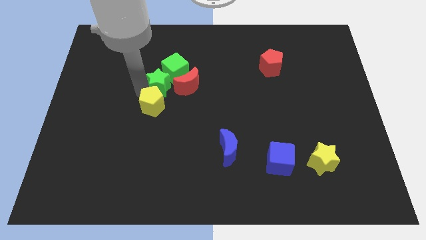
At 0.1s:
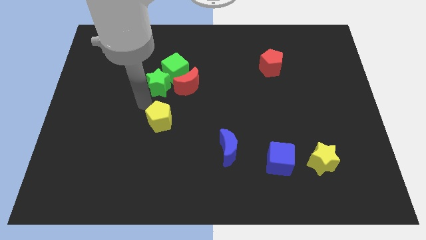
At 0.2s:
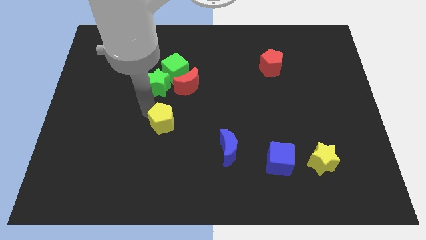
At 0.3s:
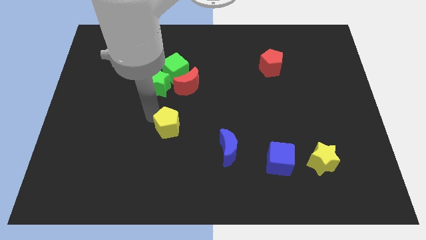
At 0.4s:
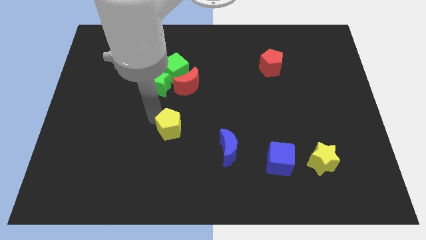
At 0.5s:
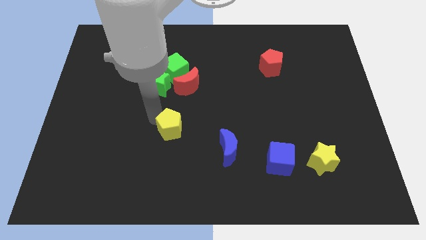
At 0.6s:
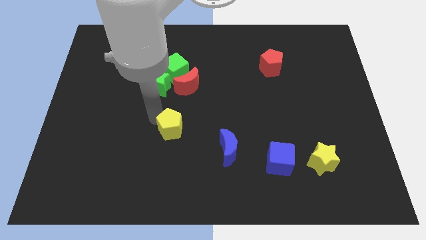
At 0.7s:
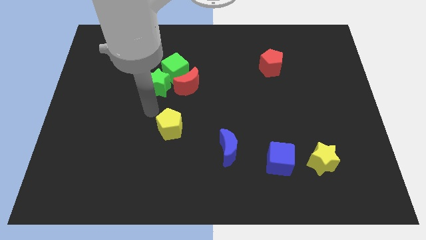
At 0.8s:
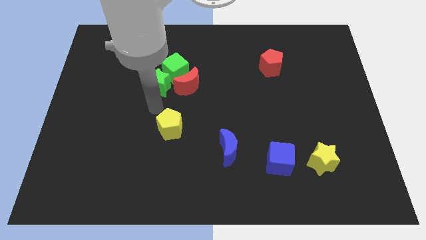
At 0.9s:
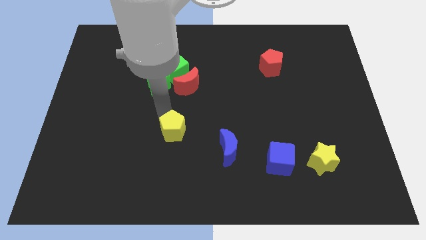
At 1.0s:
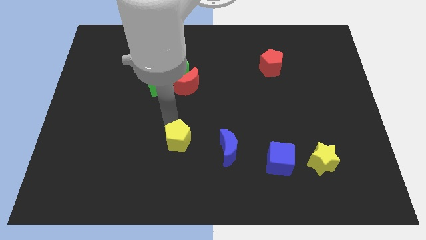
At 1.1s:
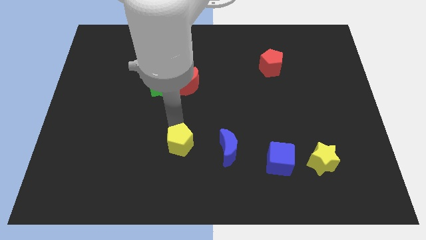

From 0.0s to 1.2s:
apart yellow pentagon from green star

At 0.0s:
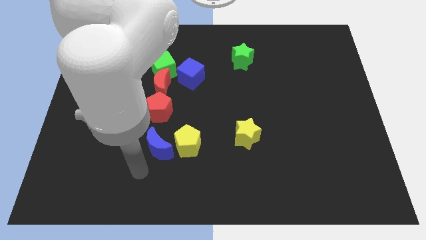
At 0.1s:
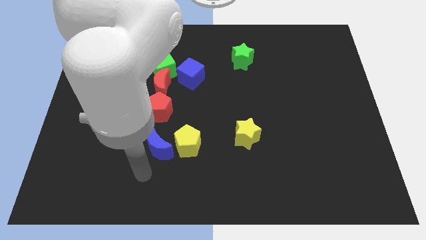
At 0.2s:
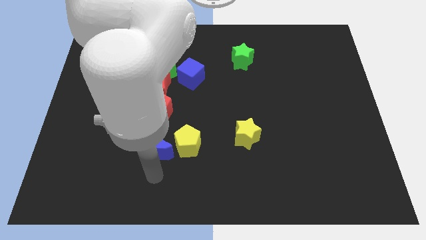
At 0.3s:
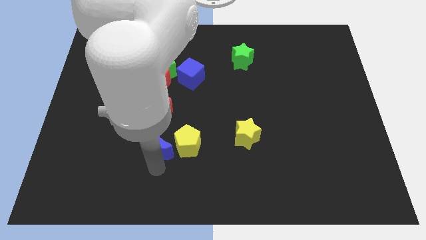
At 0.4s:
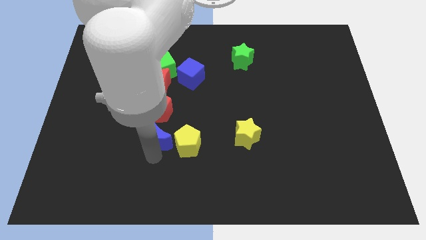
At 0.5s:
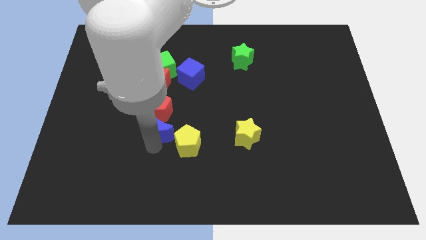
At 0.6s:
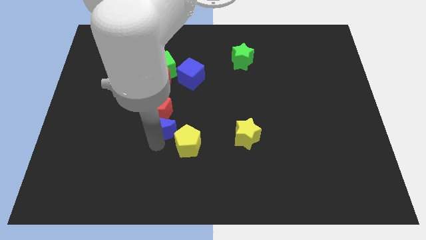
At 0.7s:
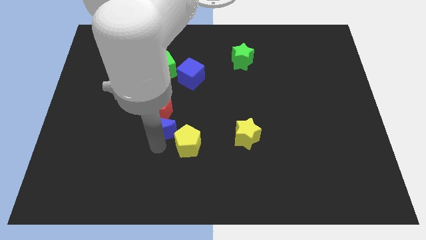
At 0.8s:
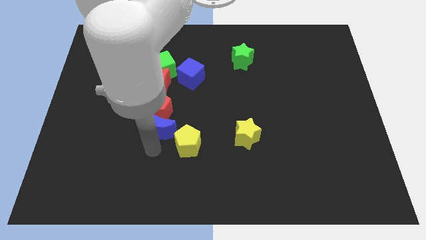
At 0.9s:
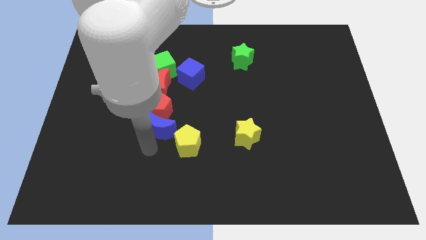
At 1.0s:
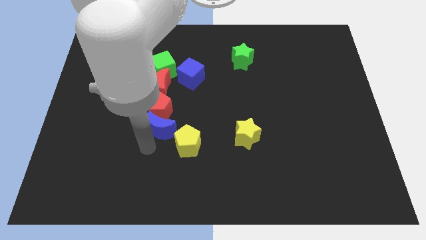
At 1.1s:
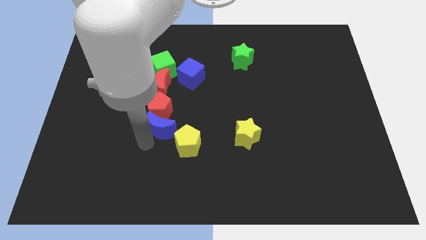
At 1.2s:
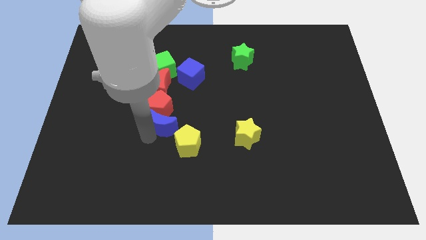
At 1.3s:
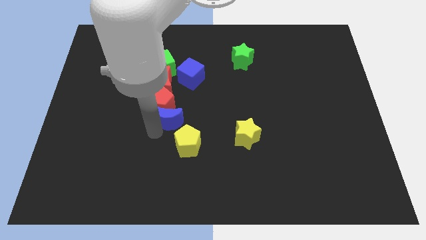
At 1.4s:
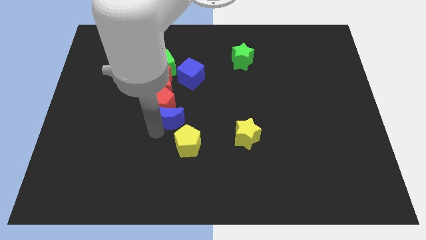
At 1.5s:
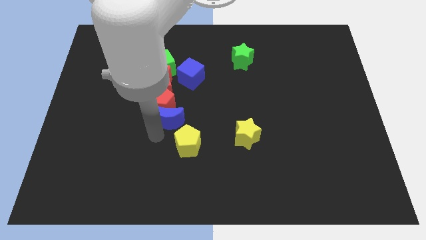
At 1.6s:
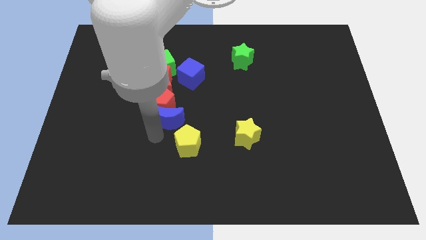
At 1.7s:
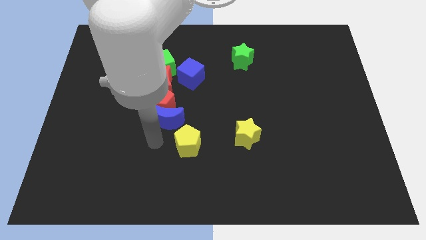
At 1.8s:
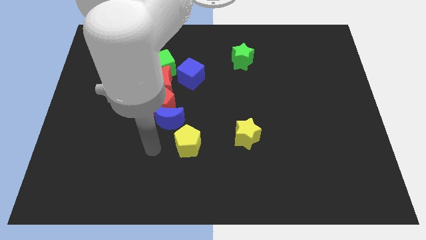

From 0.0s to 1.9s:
push the blue moon into the red pentagon

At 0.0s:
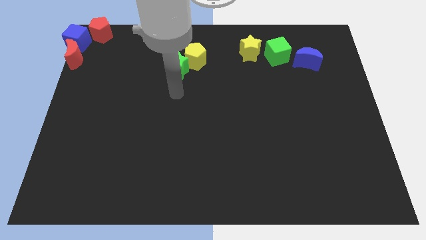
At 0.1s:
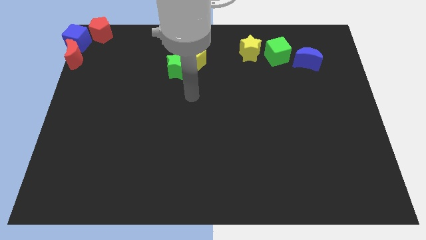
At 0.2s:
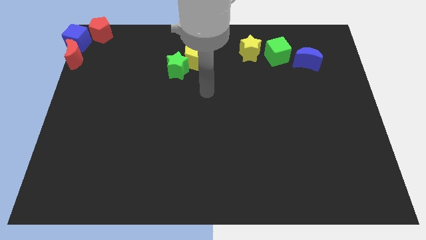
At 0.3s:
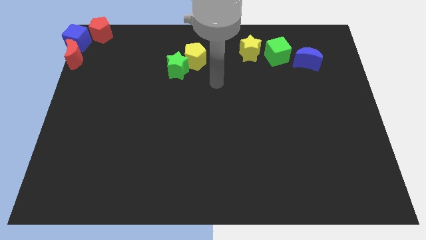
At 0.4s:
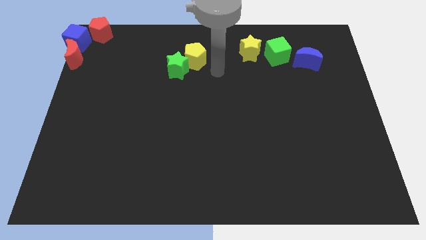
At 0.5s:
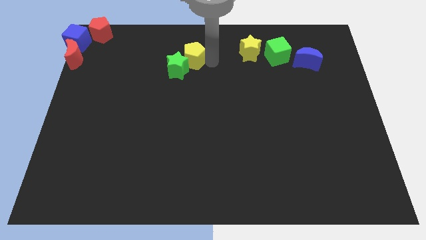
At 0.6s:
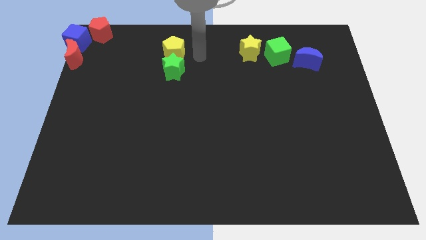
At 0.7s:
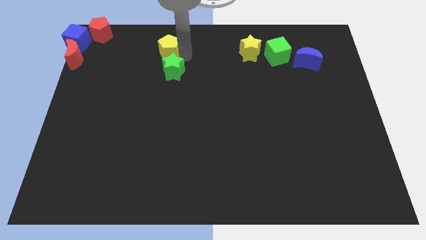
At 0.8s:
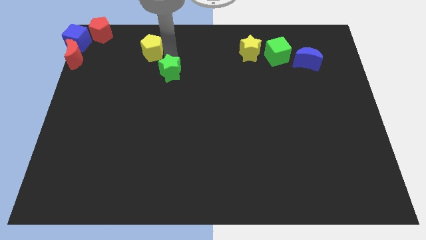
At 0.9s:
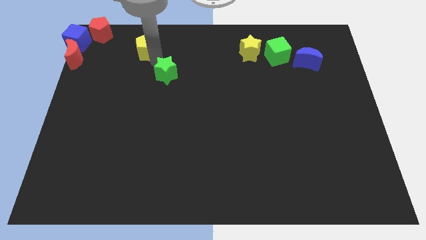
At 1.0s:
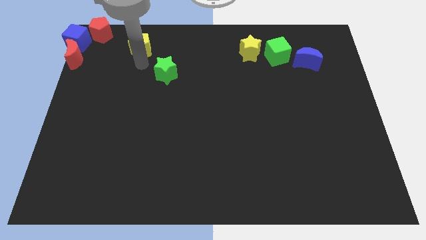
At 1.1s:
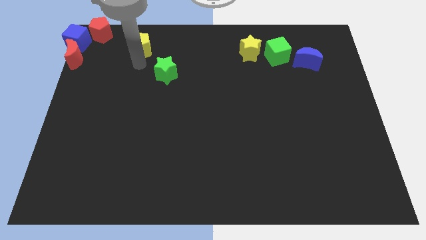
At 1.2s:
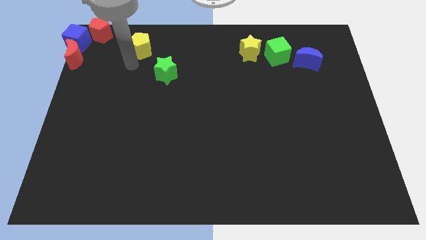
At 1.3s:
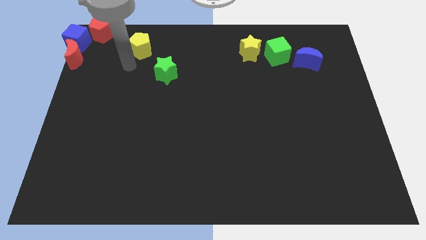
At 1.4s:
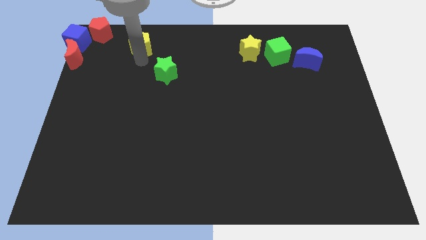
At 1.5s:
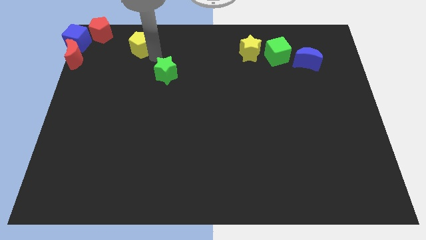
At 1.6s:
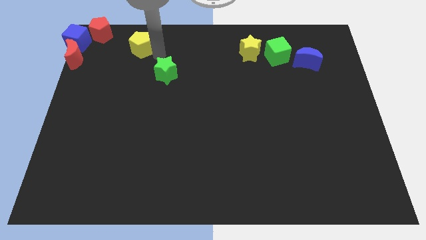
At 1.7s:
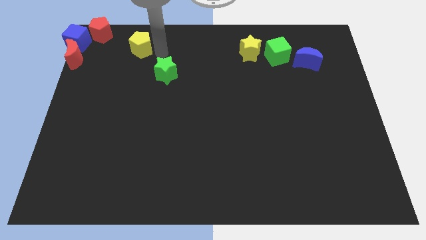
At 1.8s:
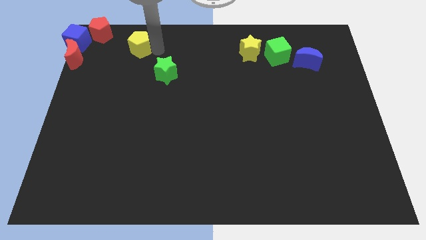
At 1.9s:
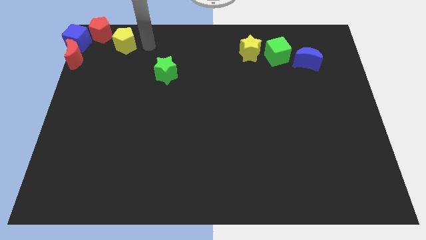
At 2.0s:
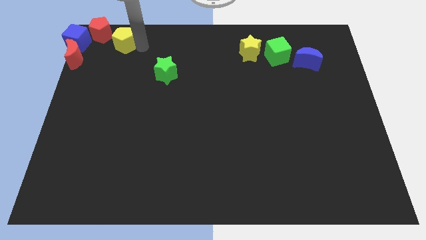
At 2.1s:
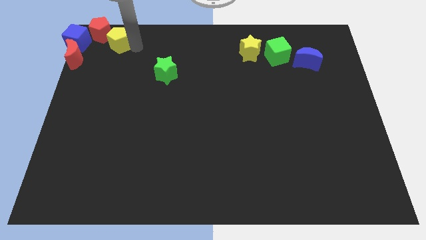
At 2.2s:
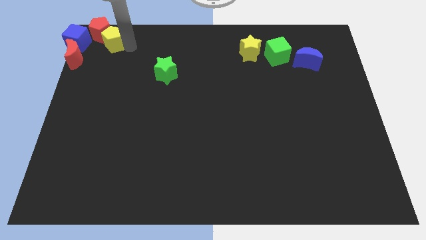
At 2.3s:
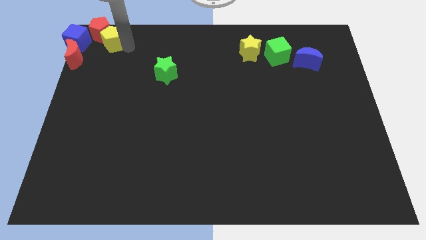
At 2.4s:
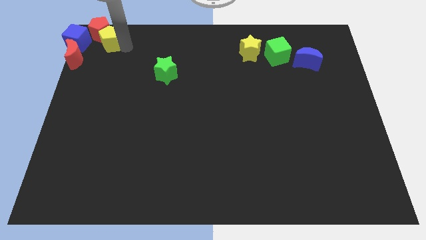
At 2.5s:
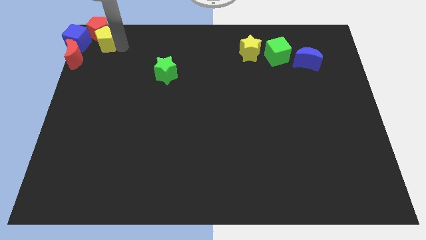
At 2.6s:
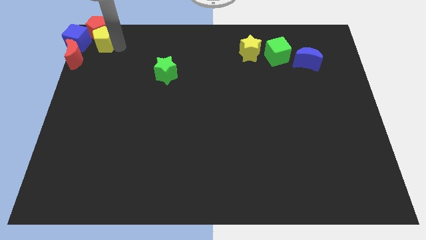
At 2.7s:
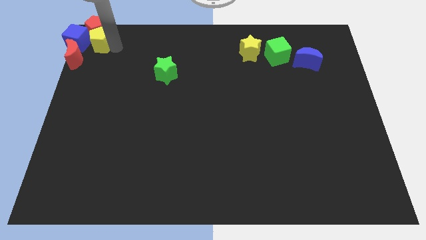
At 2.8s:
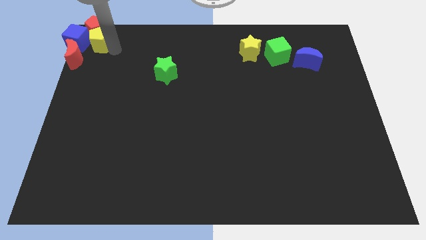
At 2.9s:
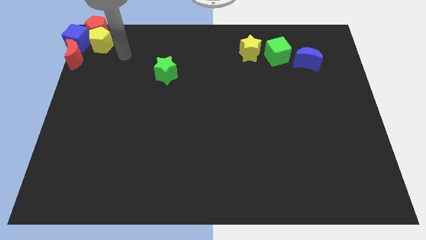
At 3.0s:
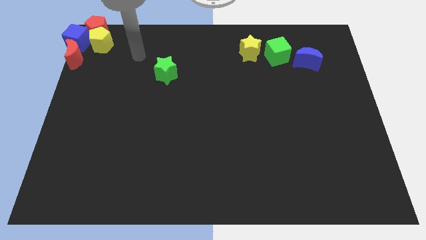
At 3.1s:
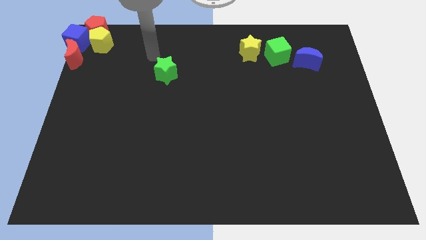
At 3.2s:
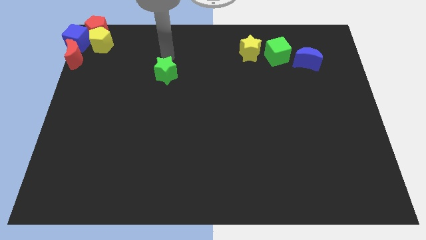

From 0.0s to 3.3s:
separate the yellow pentagon away from the green star

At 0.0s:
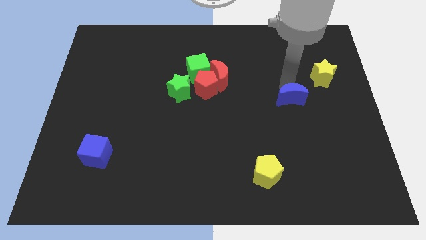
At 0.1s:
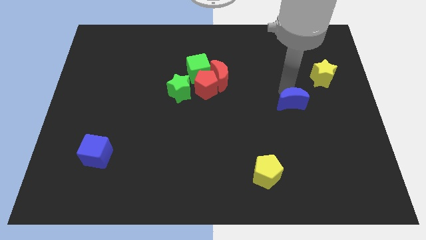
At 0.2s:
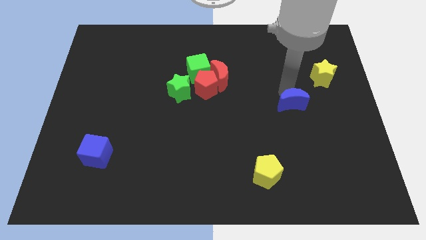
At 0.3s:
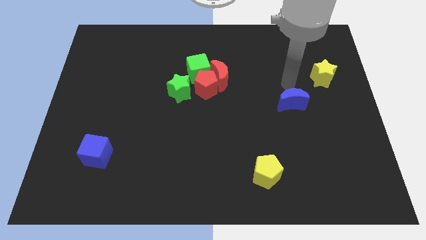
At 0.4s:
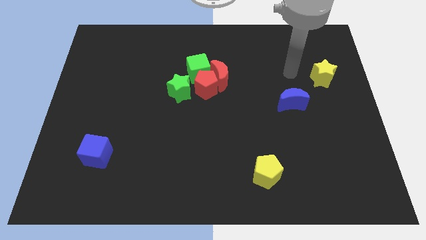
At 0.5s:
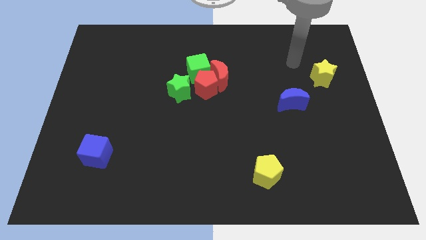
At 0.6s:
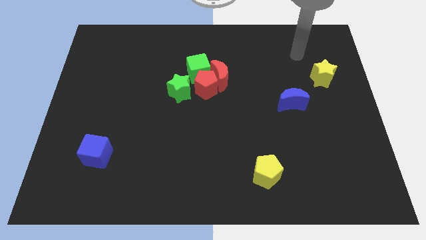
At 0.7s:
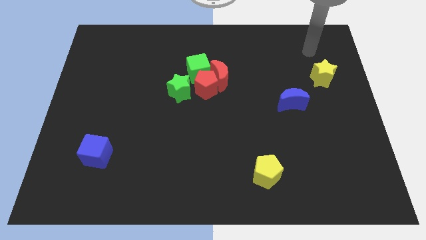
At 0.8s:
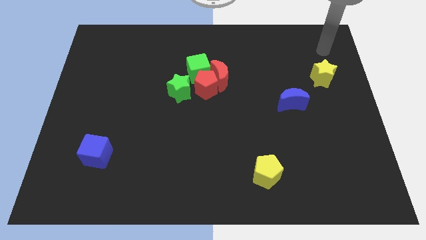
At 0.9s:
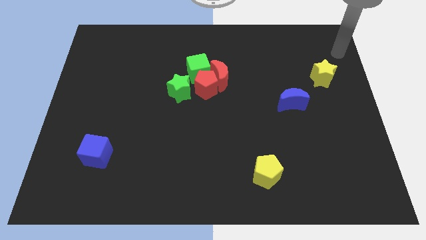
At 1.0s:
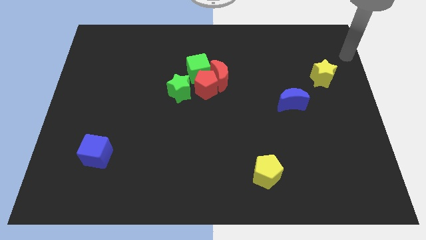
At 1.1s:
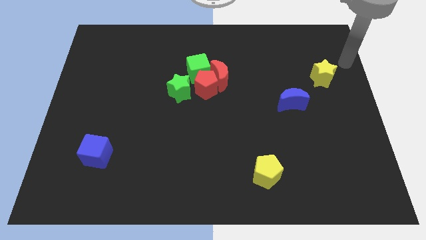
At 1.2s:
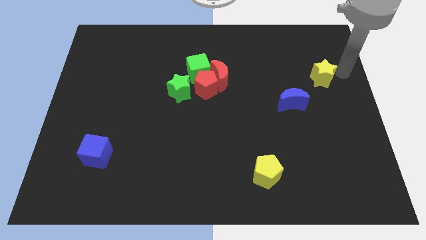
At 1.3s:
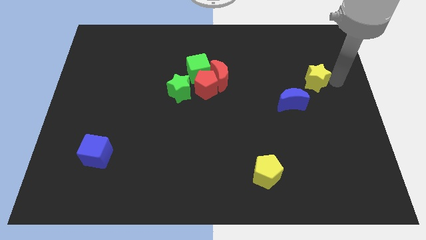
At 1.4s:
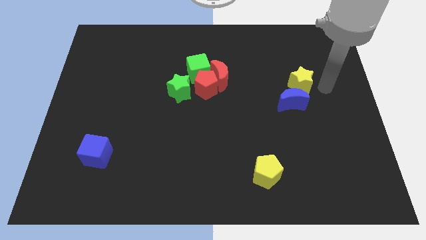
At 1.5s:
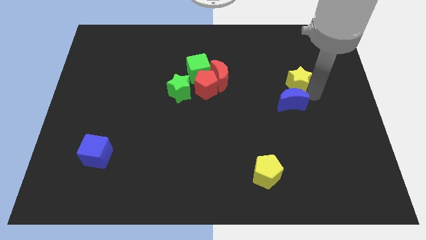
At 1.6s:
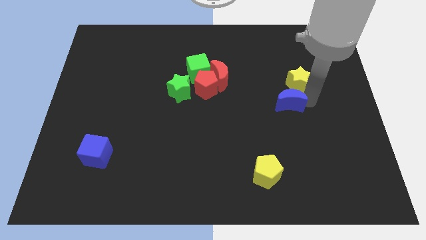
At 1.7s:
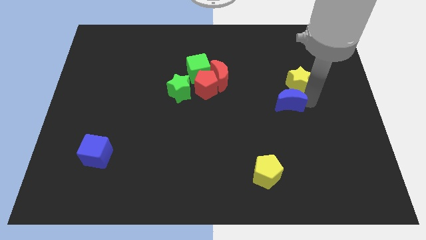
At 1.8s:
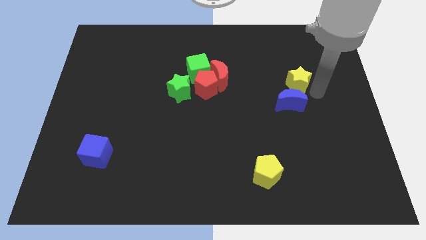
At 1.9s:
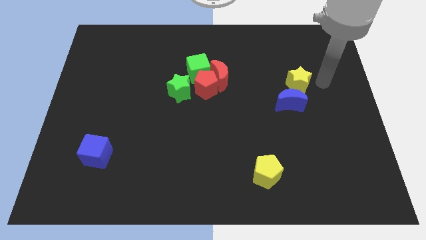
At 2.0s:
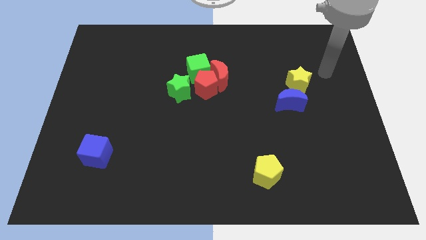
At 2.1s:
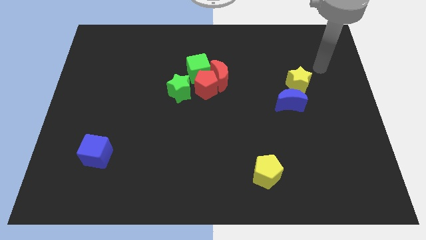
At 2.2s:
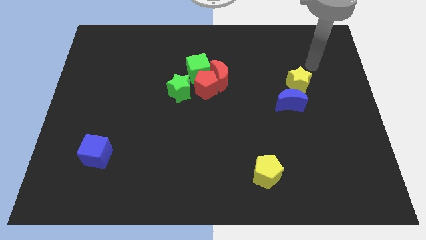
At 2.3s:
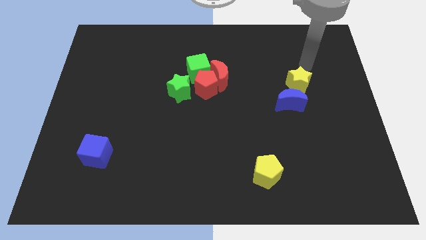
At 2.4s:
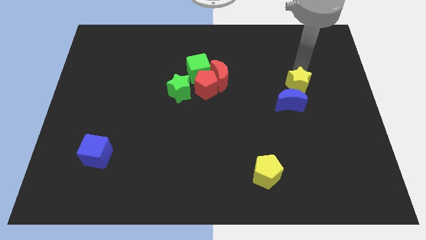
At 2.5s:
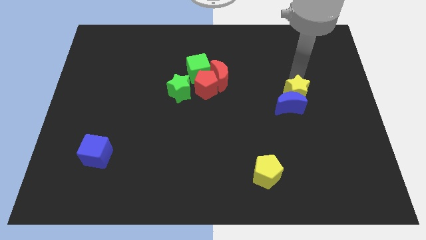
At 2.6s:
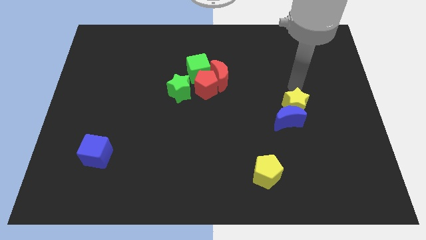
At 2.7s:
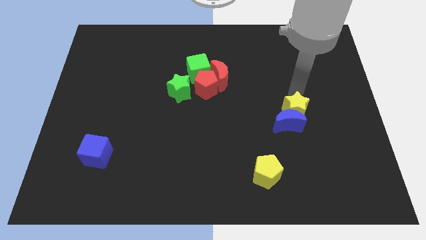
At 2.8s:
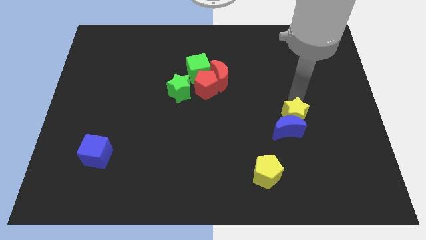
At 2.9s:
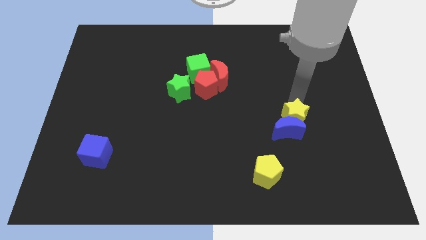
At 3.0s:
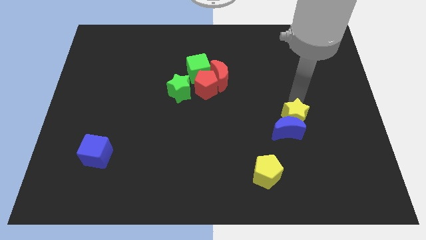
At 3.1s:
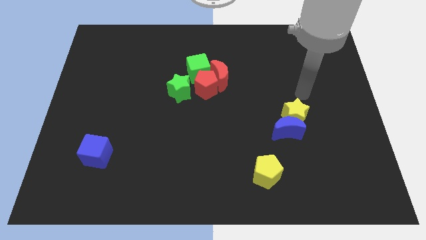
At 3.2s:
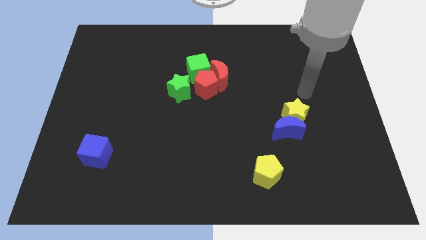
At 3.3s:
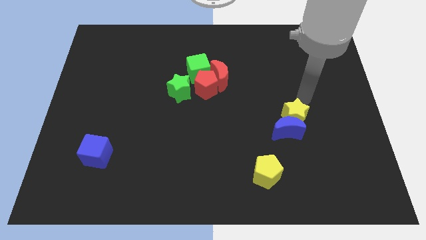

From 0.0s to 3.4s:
push the yellow star into the blue crescent
